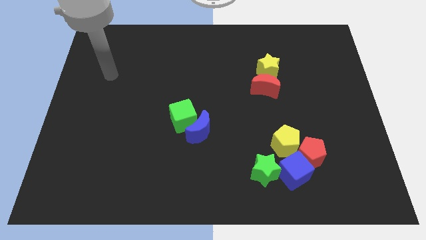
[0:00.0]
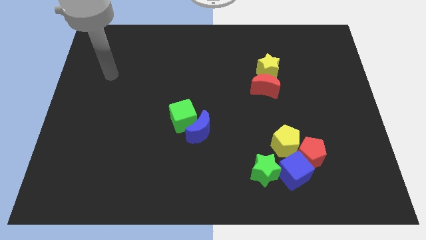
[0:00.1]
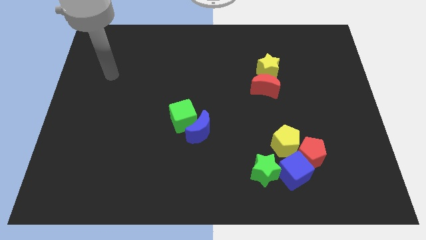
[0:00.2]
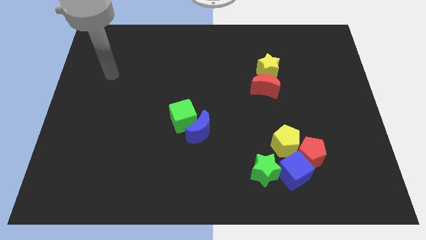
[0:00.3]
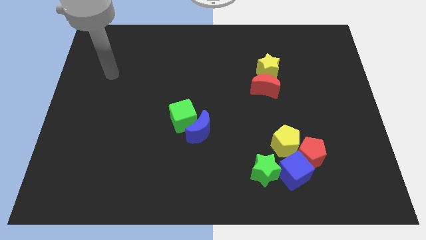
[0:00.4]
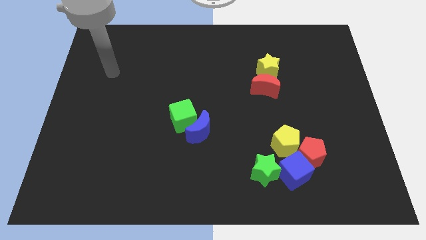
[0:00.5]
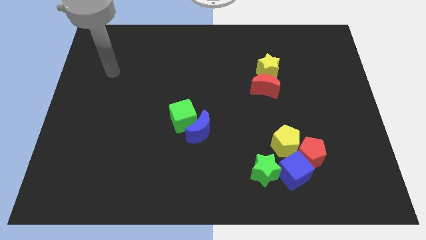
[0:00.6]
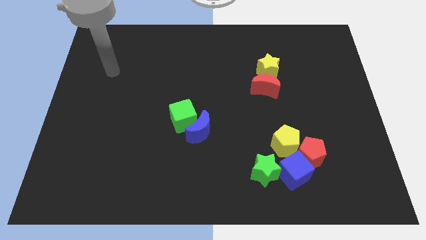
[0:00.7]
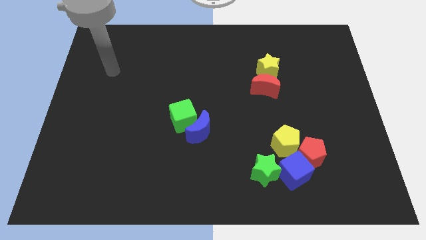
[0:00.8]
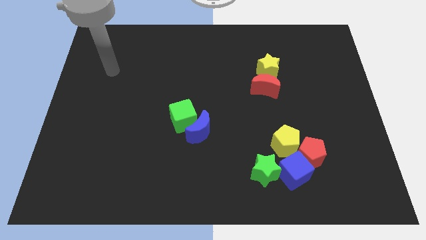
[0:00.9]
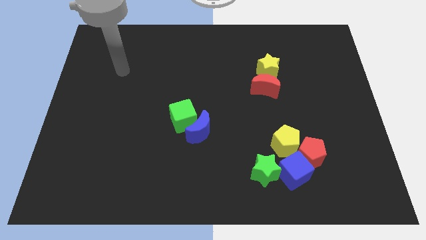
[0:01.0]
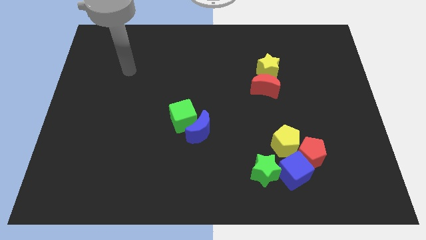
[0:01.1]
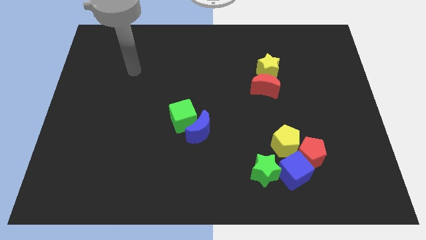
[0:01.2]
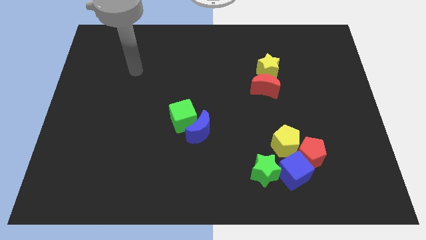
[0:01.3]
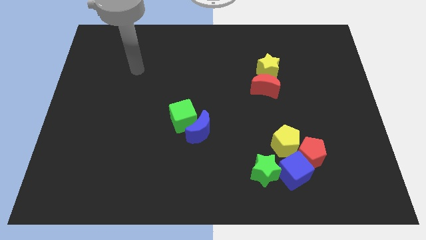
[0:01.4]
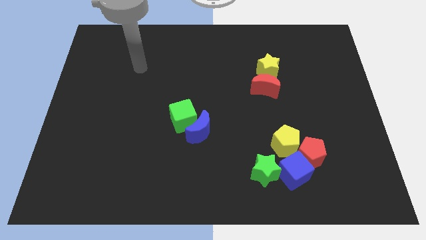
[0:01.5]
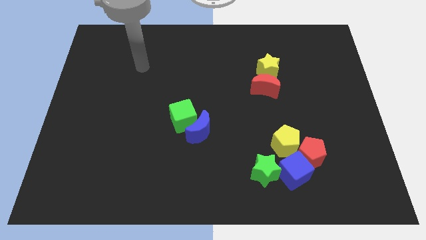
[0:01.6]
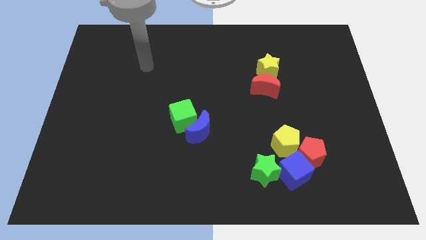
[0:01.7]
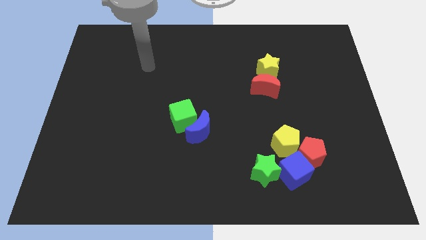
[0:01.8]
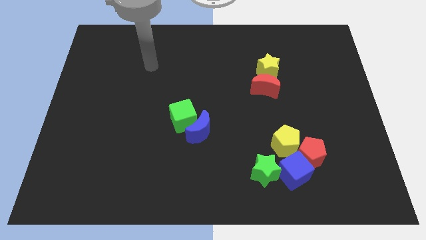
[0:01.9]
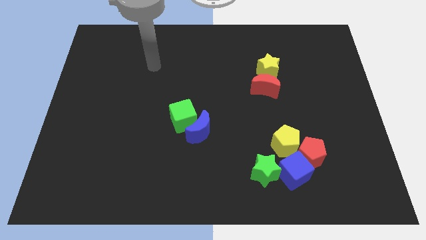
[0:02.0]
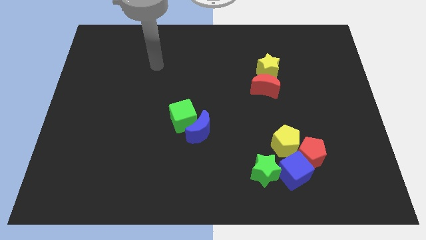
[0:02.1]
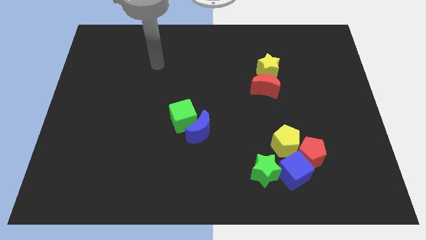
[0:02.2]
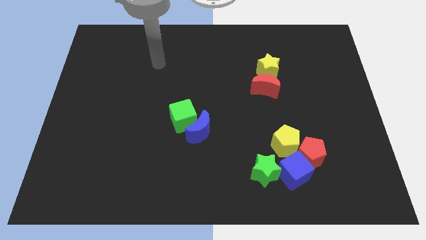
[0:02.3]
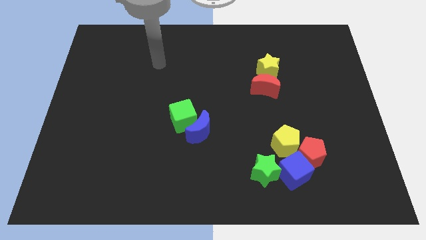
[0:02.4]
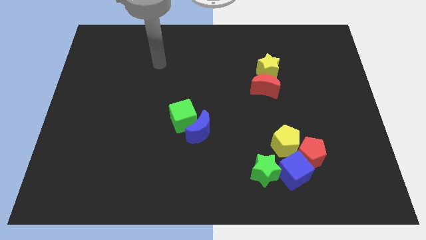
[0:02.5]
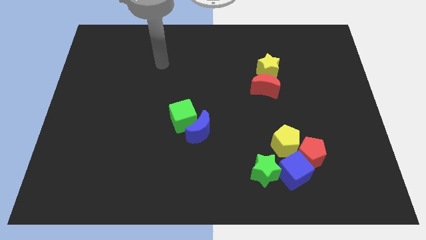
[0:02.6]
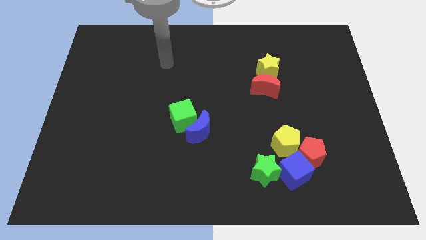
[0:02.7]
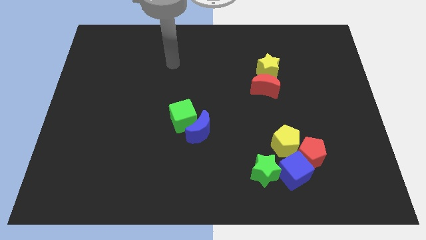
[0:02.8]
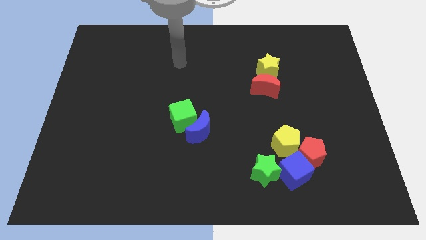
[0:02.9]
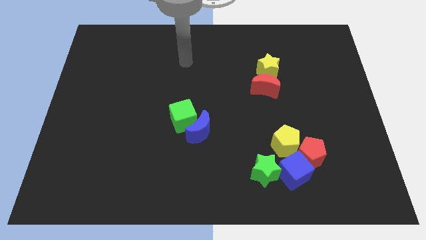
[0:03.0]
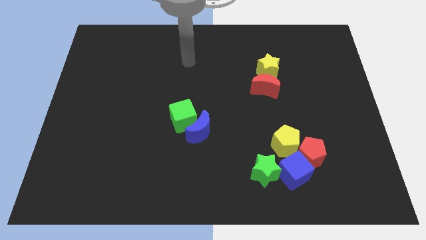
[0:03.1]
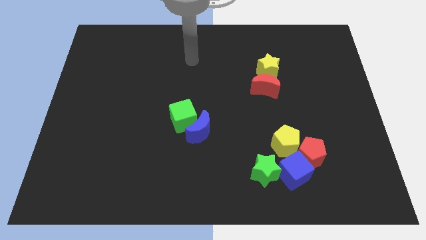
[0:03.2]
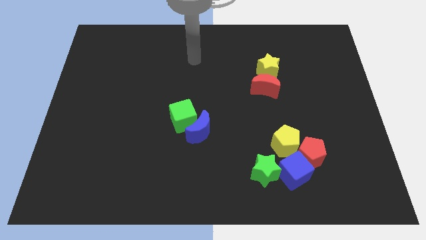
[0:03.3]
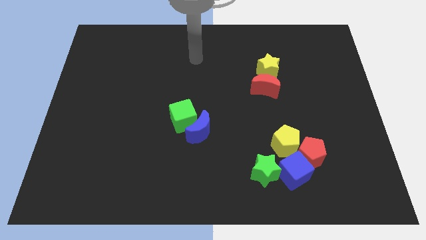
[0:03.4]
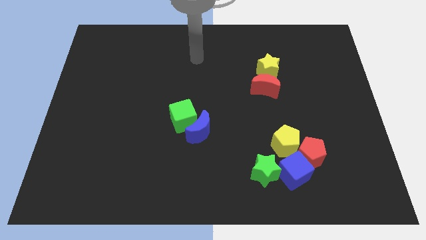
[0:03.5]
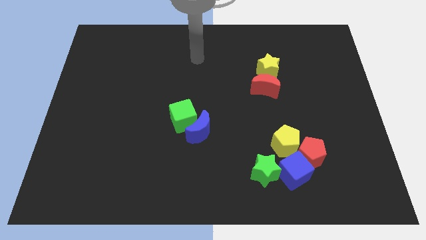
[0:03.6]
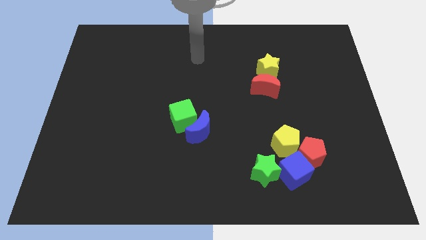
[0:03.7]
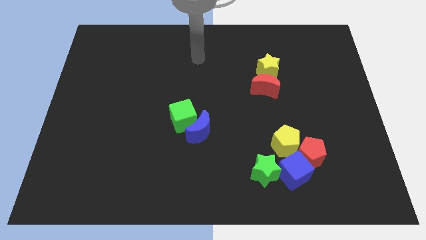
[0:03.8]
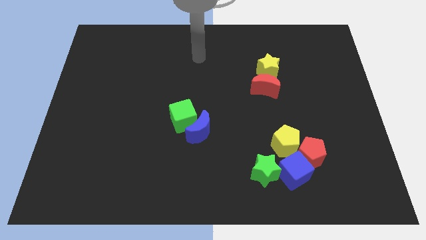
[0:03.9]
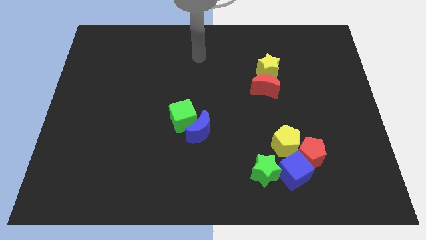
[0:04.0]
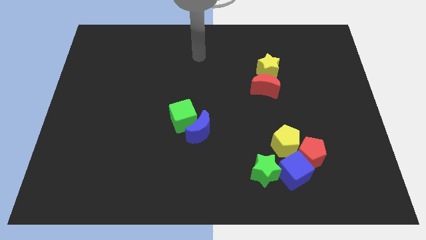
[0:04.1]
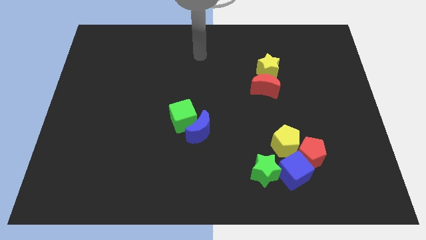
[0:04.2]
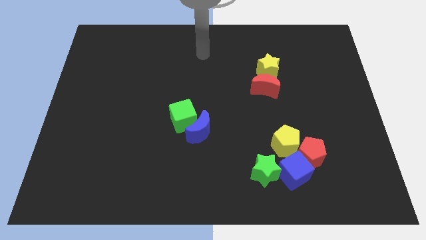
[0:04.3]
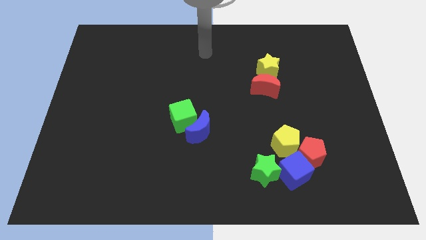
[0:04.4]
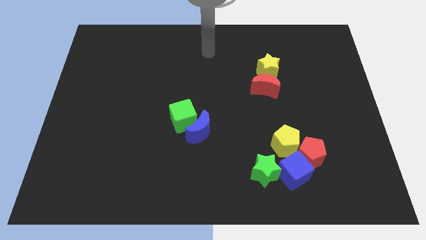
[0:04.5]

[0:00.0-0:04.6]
move your arm to top center

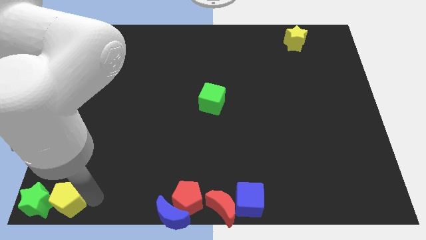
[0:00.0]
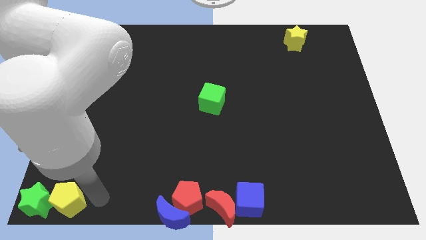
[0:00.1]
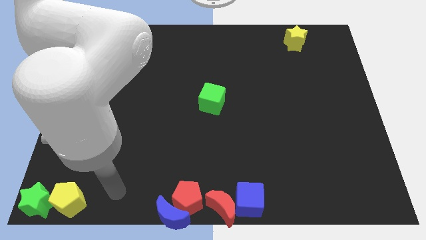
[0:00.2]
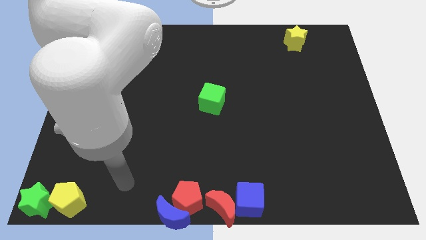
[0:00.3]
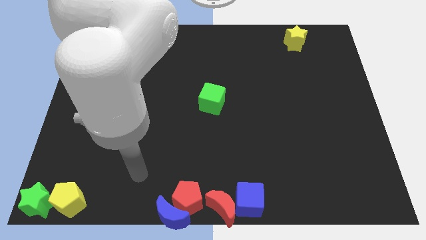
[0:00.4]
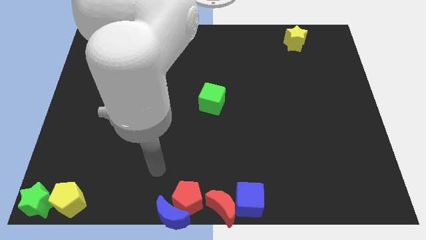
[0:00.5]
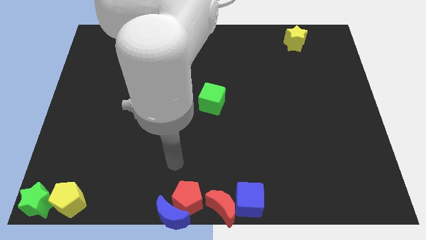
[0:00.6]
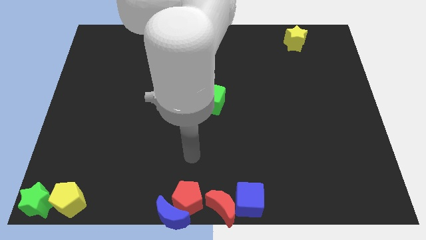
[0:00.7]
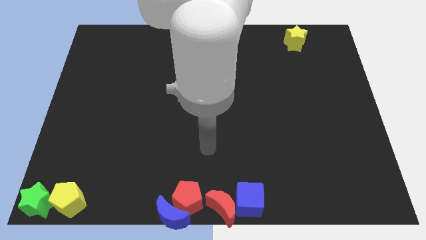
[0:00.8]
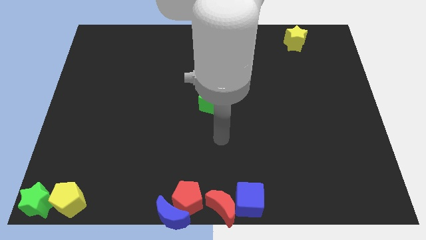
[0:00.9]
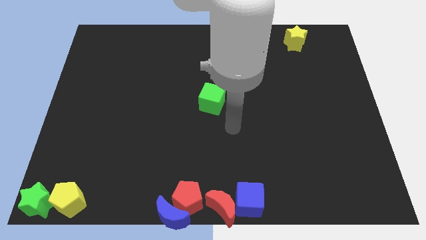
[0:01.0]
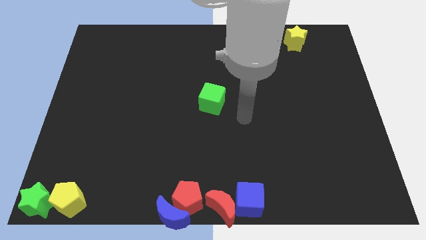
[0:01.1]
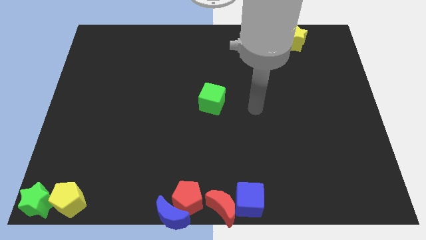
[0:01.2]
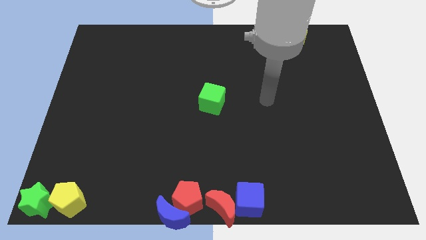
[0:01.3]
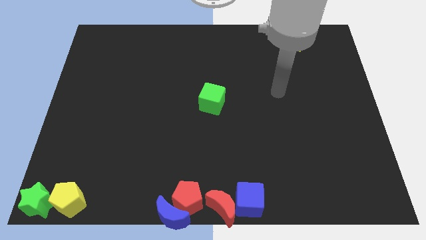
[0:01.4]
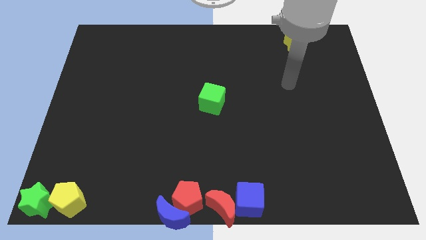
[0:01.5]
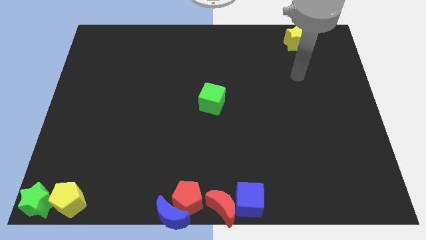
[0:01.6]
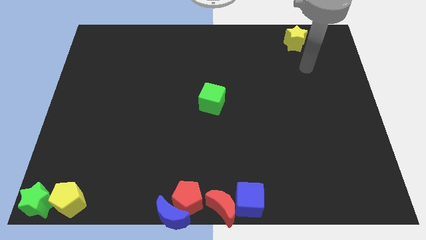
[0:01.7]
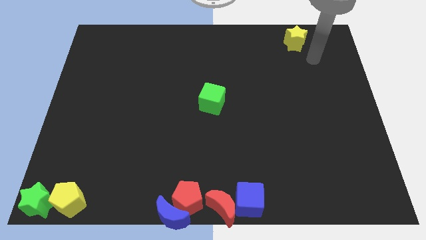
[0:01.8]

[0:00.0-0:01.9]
move your arm away from the yellow pentagon

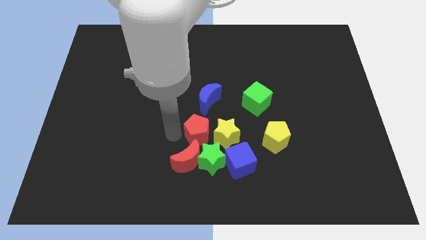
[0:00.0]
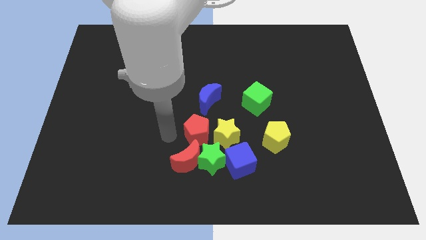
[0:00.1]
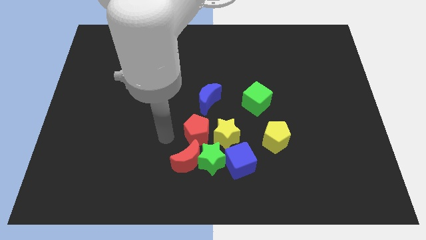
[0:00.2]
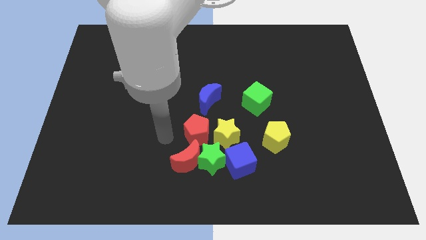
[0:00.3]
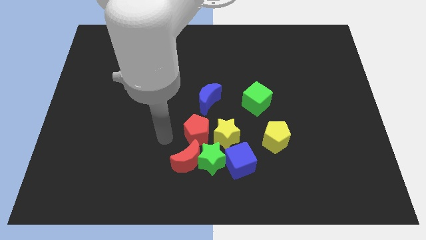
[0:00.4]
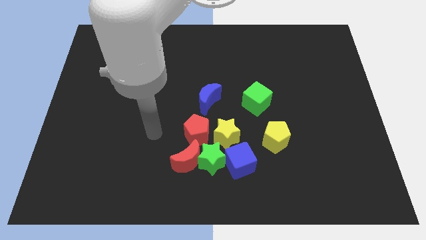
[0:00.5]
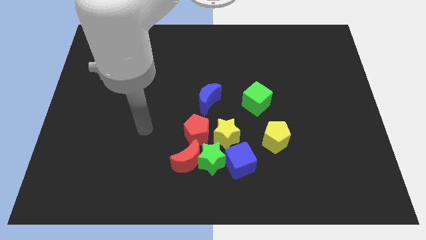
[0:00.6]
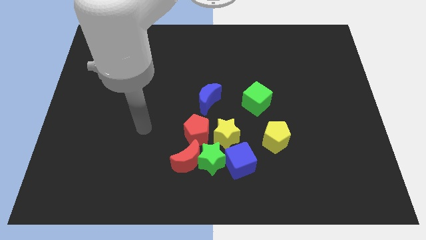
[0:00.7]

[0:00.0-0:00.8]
move your arm away from the red pentagon

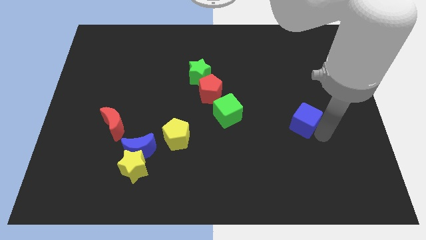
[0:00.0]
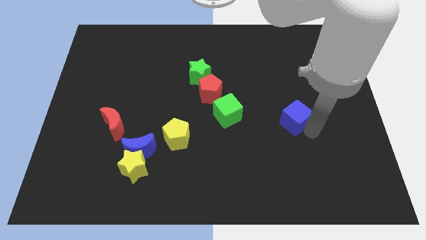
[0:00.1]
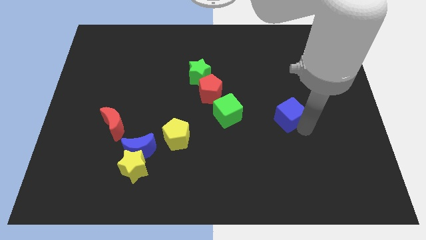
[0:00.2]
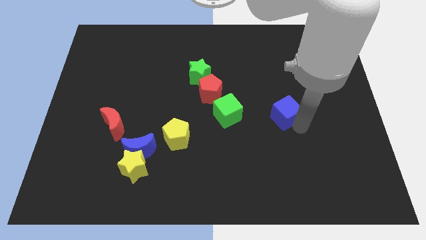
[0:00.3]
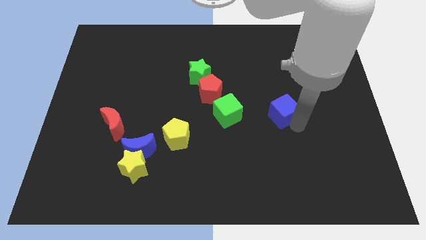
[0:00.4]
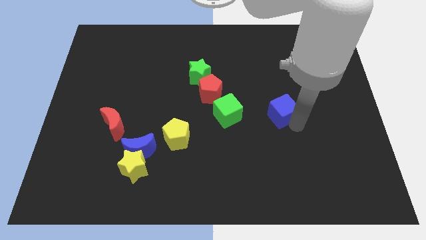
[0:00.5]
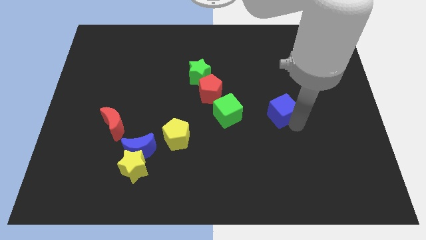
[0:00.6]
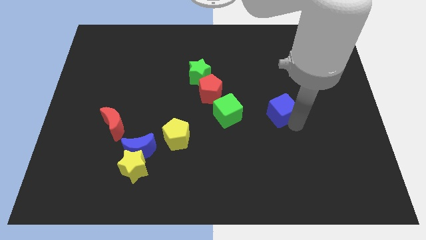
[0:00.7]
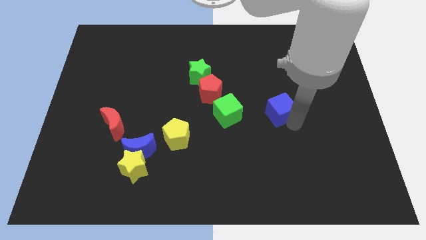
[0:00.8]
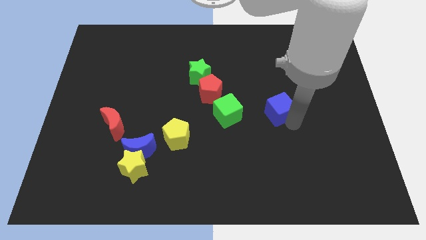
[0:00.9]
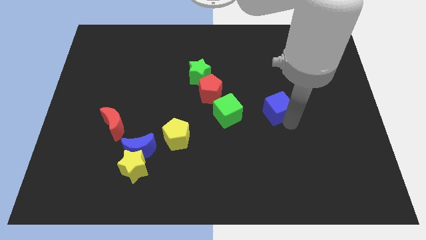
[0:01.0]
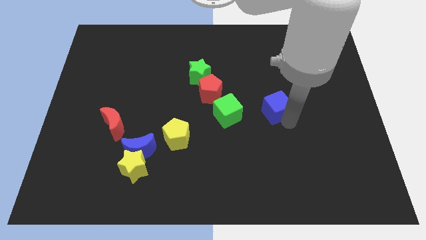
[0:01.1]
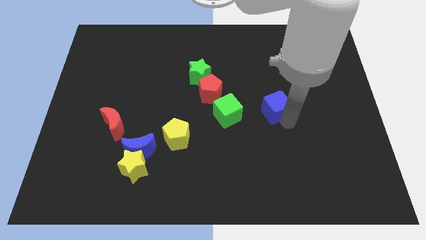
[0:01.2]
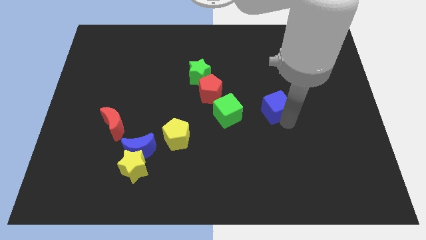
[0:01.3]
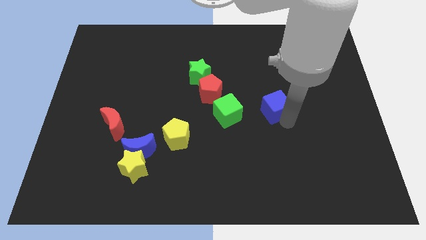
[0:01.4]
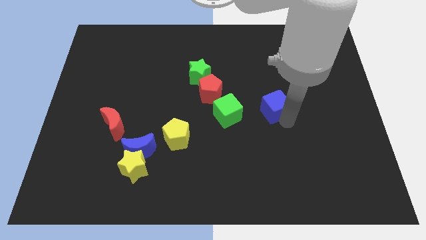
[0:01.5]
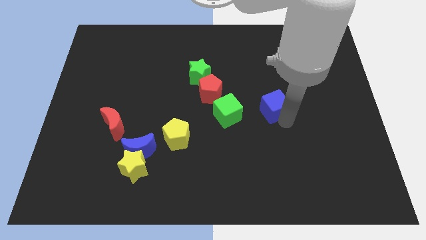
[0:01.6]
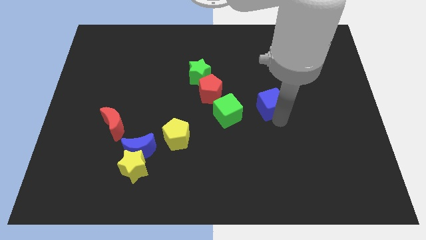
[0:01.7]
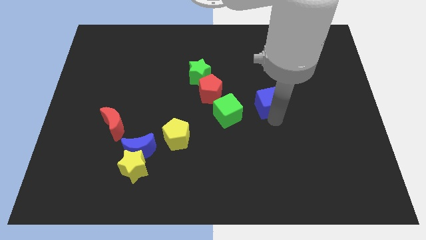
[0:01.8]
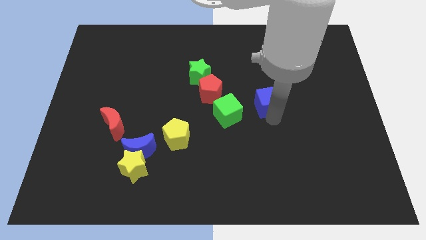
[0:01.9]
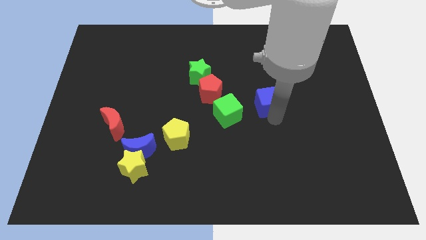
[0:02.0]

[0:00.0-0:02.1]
move the blue cube parallel to the right of green cube
